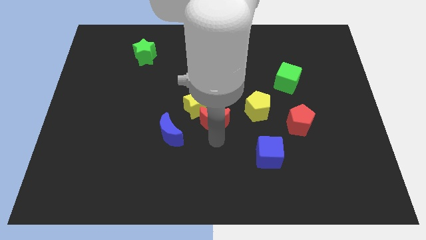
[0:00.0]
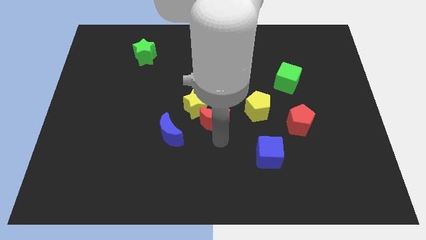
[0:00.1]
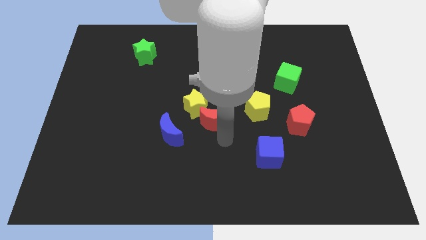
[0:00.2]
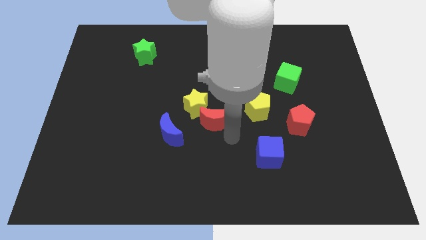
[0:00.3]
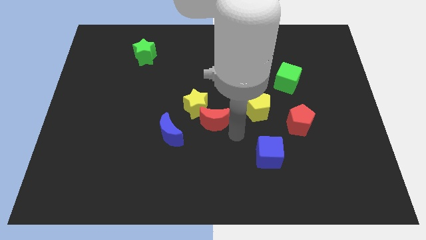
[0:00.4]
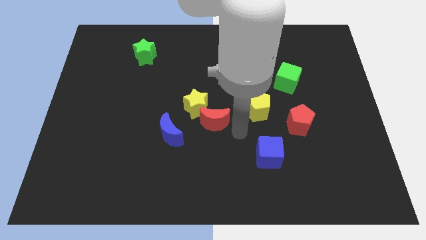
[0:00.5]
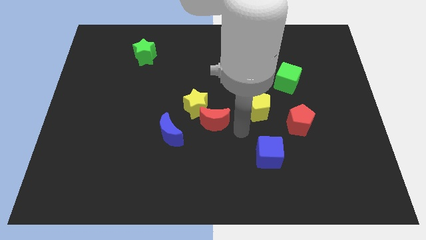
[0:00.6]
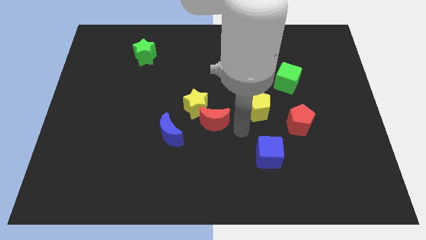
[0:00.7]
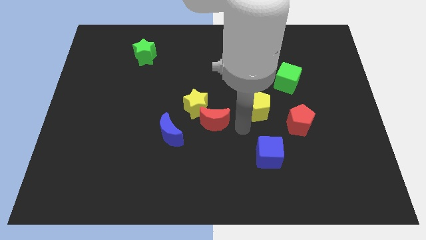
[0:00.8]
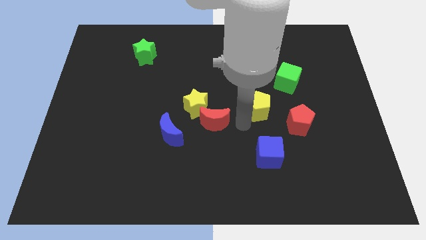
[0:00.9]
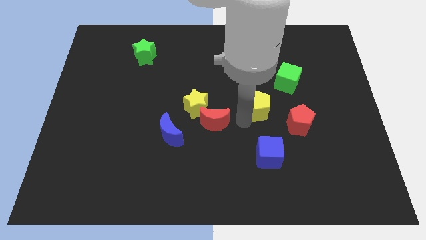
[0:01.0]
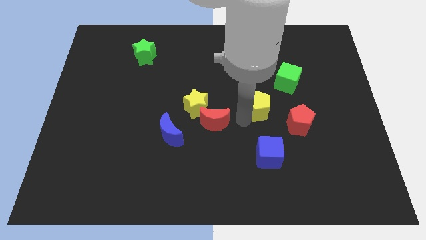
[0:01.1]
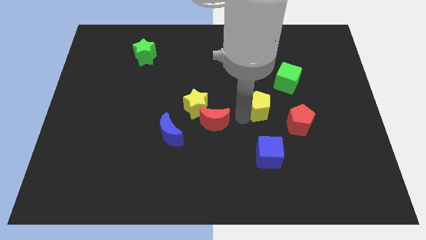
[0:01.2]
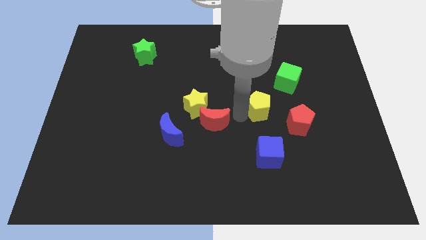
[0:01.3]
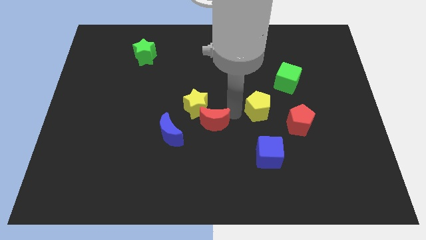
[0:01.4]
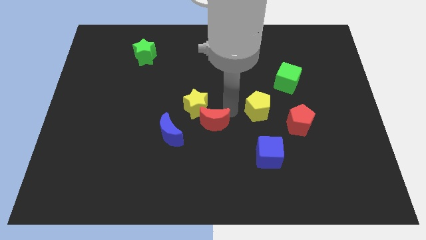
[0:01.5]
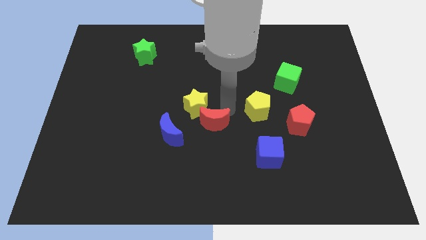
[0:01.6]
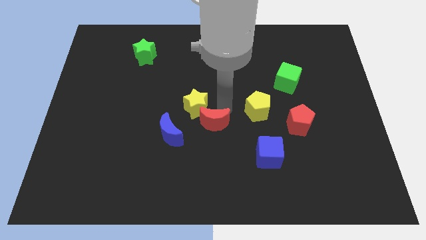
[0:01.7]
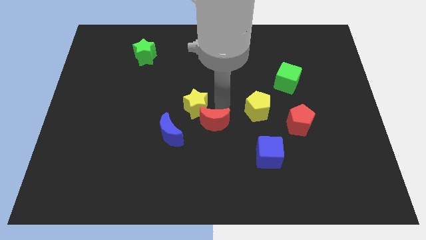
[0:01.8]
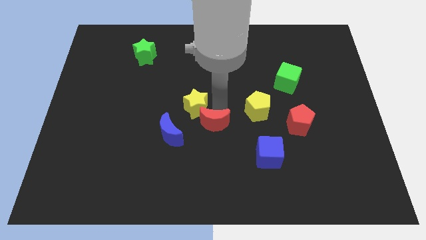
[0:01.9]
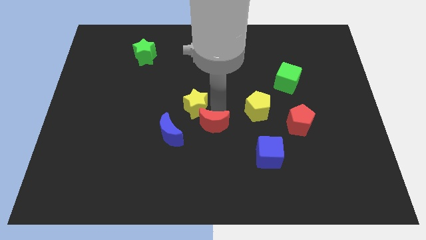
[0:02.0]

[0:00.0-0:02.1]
point your arm above red moon

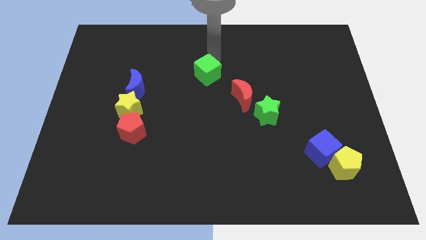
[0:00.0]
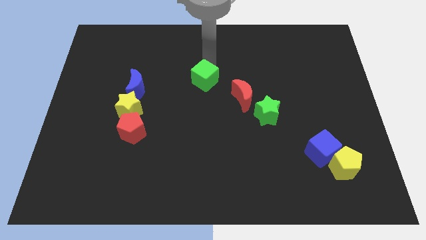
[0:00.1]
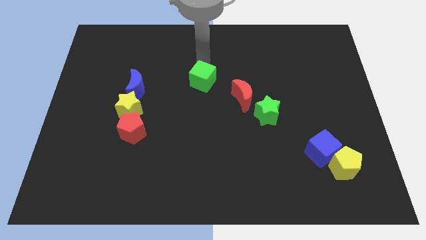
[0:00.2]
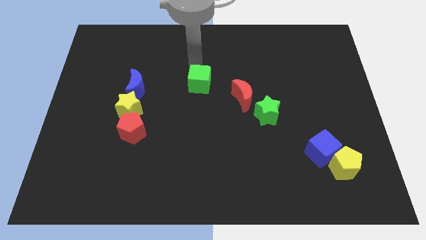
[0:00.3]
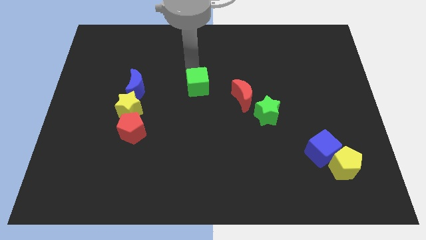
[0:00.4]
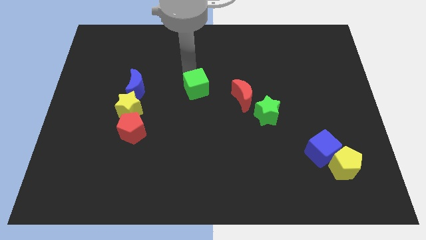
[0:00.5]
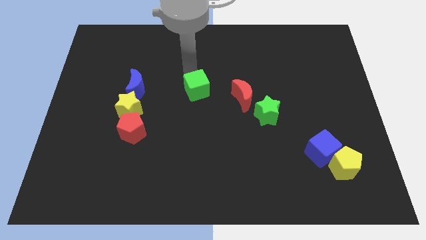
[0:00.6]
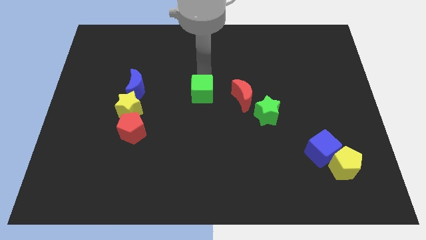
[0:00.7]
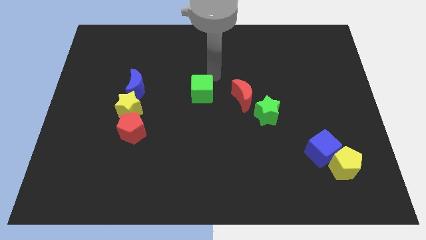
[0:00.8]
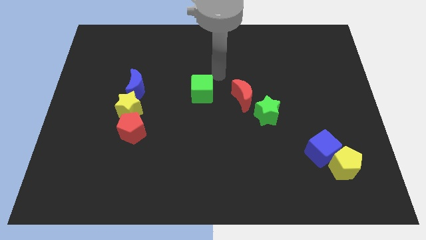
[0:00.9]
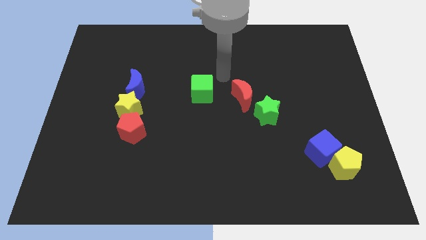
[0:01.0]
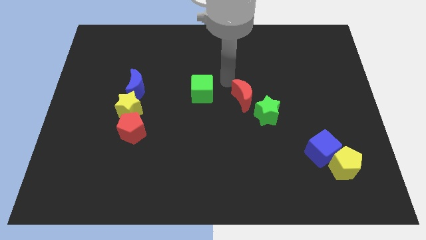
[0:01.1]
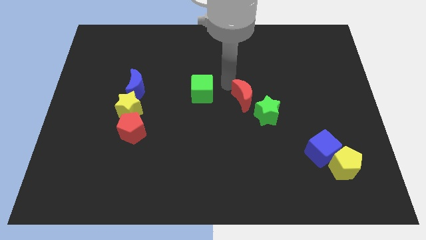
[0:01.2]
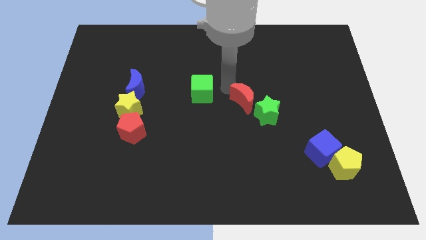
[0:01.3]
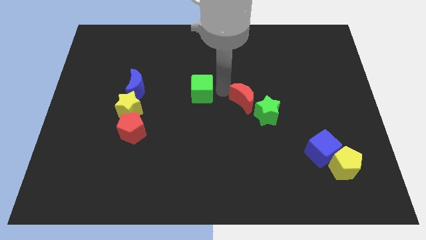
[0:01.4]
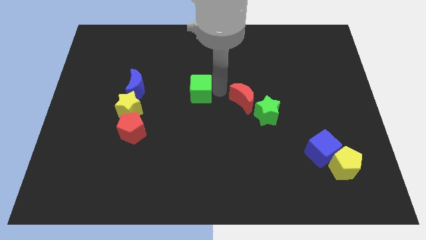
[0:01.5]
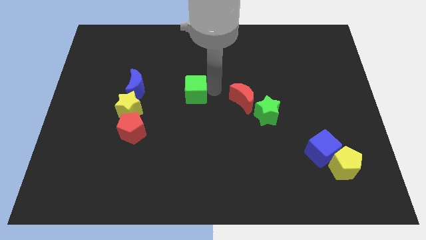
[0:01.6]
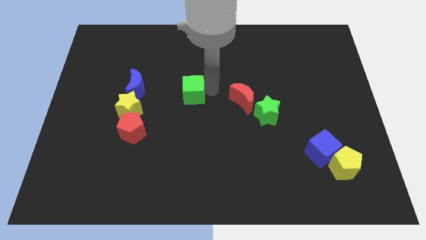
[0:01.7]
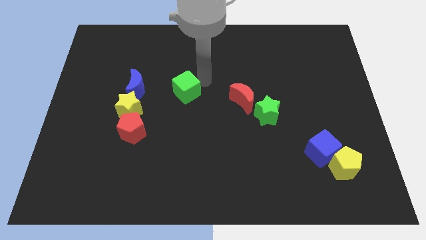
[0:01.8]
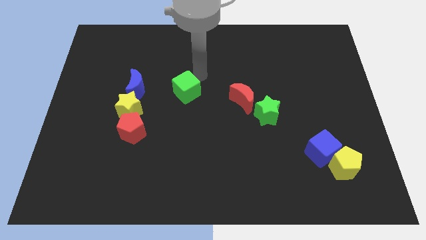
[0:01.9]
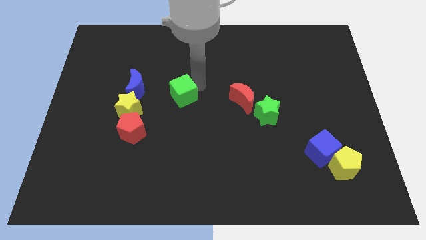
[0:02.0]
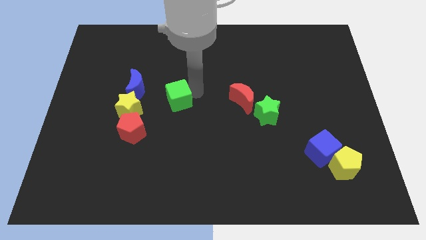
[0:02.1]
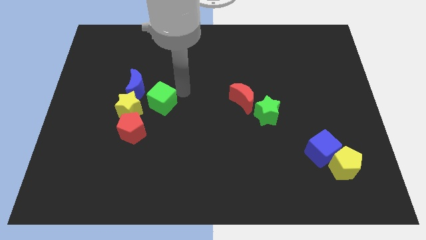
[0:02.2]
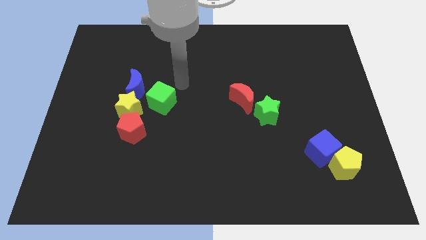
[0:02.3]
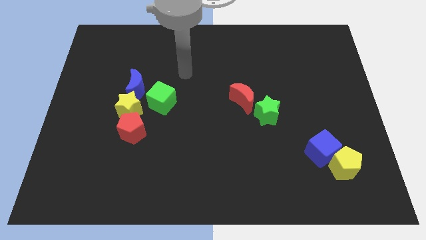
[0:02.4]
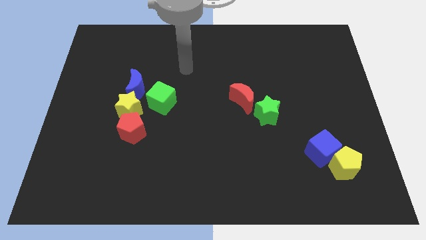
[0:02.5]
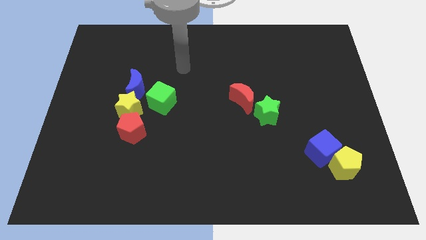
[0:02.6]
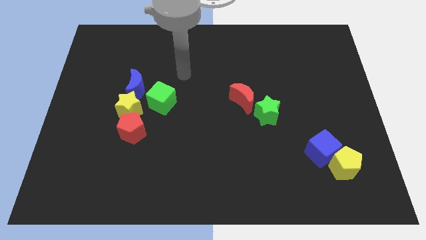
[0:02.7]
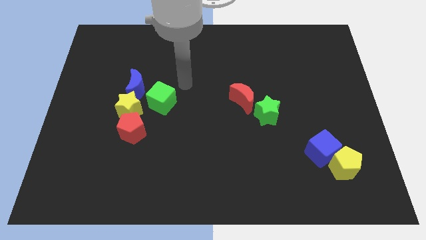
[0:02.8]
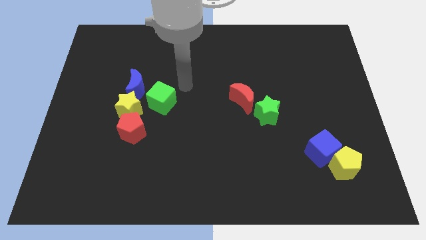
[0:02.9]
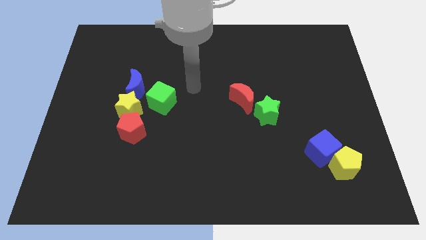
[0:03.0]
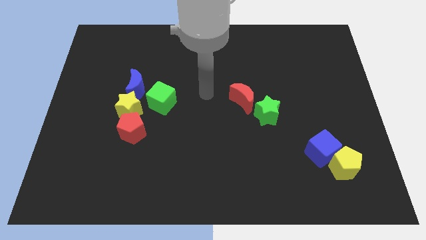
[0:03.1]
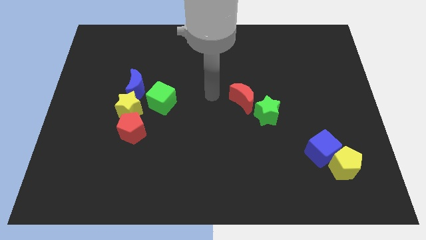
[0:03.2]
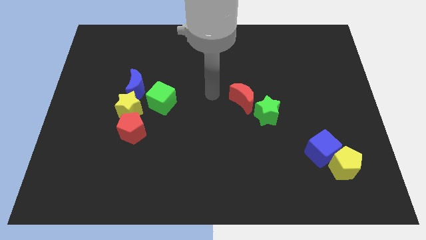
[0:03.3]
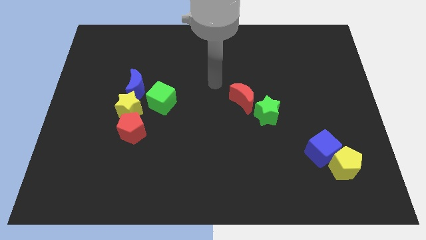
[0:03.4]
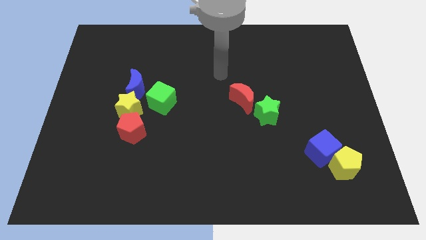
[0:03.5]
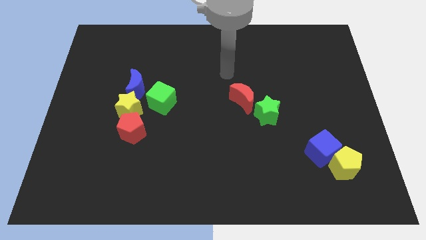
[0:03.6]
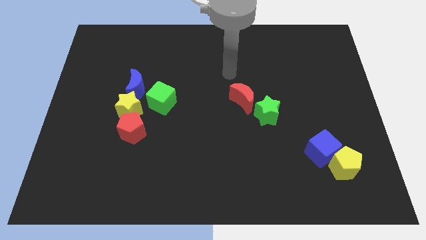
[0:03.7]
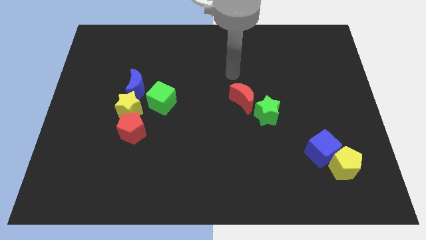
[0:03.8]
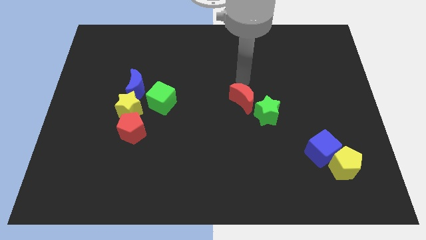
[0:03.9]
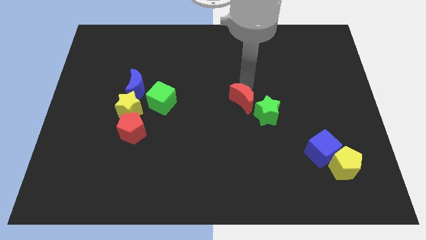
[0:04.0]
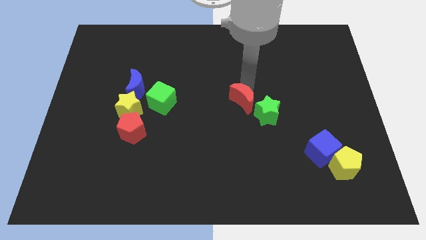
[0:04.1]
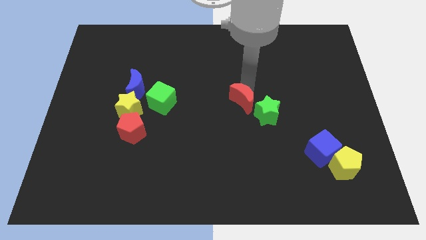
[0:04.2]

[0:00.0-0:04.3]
push the green cube to the right of the yellow star

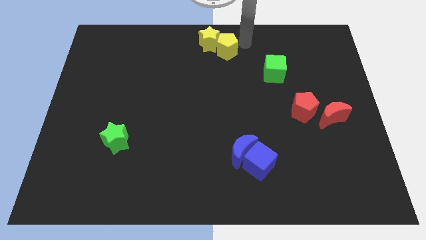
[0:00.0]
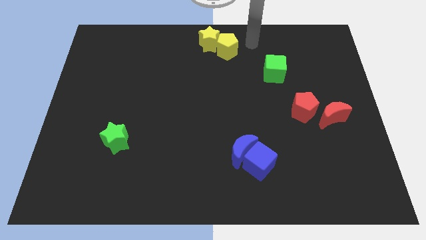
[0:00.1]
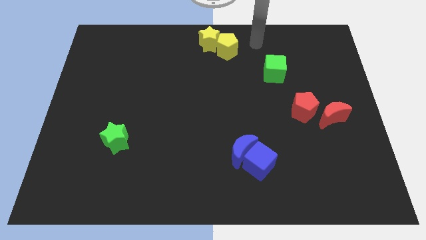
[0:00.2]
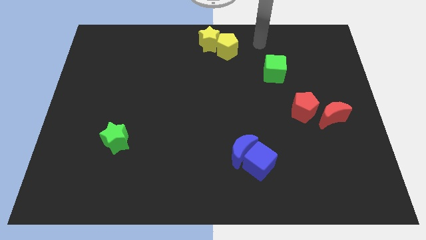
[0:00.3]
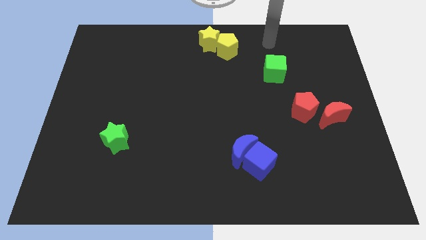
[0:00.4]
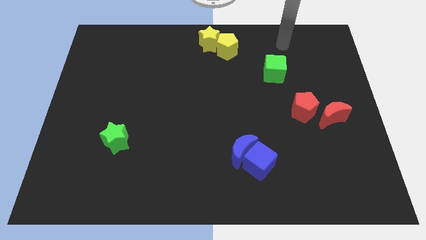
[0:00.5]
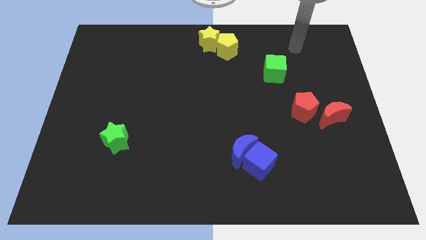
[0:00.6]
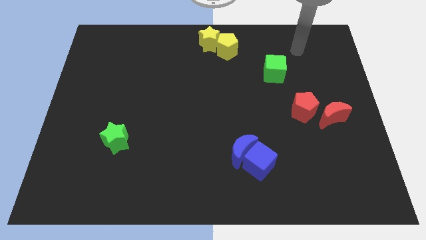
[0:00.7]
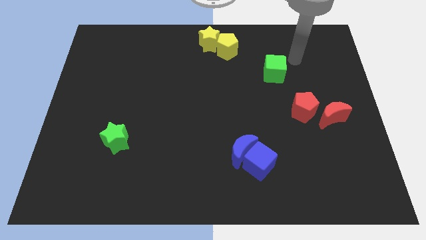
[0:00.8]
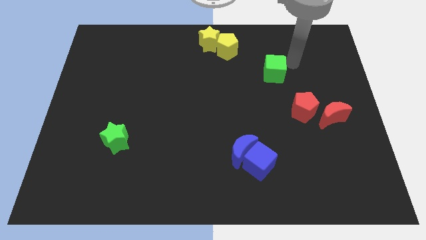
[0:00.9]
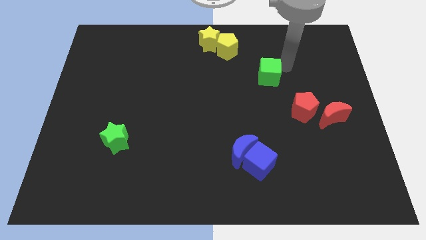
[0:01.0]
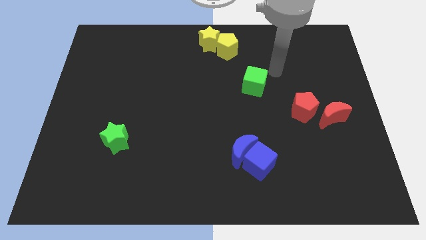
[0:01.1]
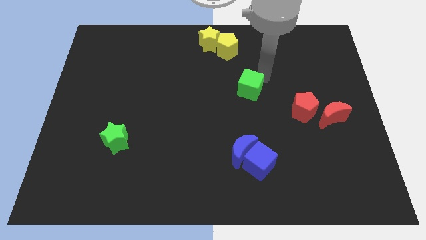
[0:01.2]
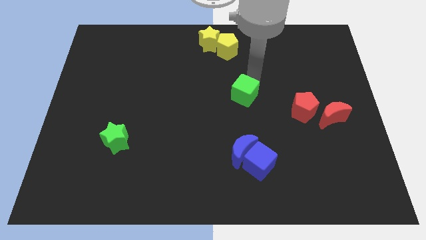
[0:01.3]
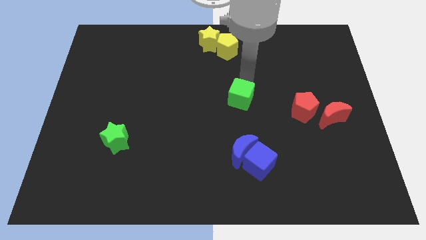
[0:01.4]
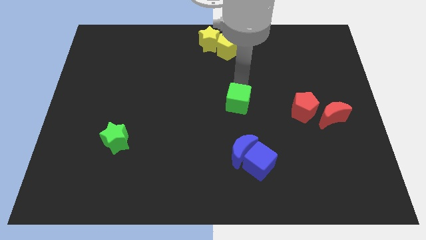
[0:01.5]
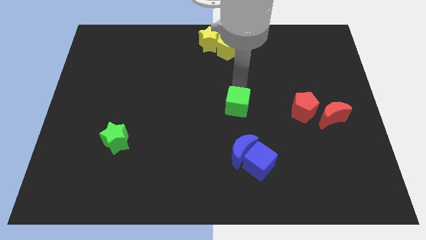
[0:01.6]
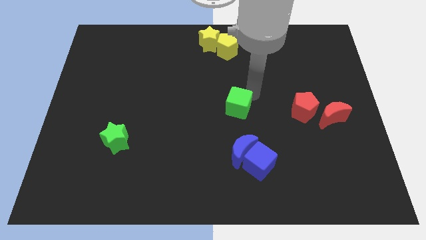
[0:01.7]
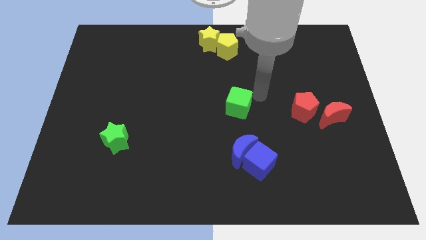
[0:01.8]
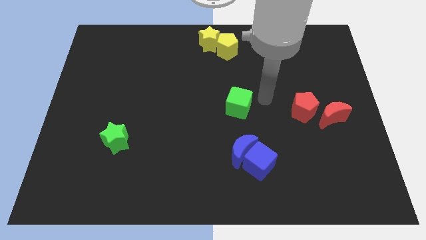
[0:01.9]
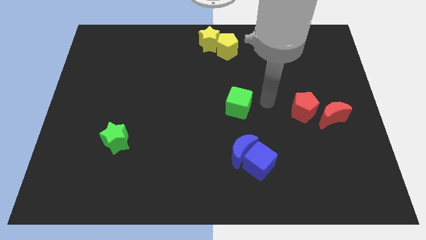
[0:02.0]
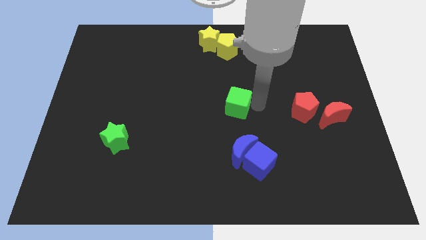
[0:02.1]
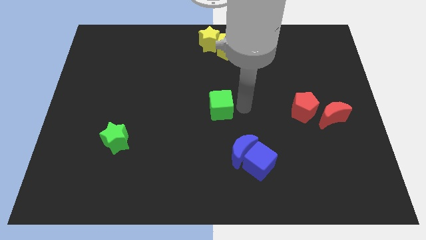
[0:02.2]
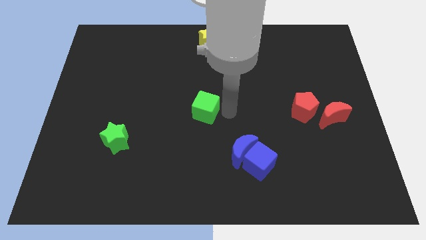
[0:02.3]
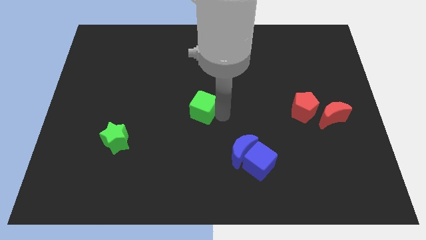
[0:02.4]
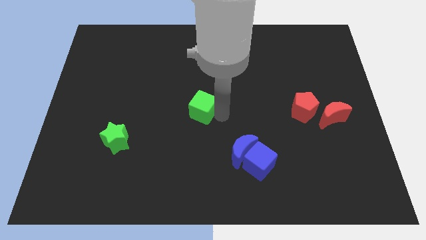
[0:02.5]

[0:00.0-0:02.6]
place the green cube at center of the board

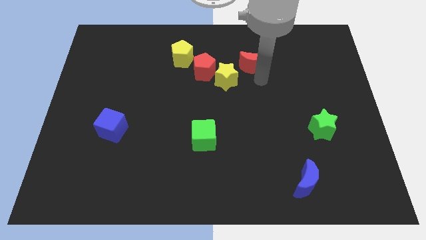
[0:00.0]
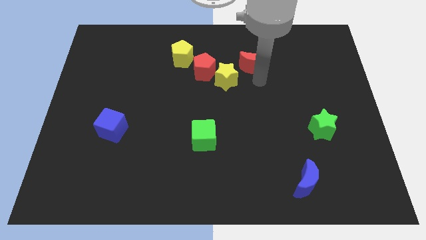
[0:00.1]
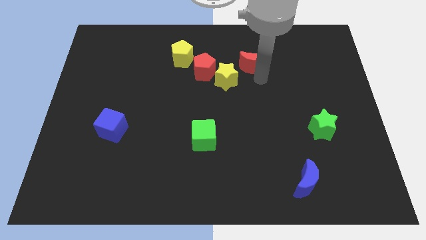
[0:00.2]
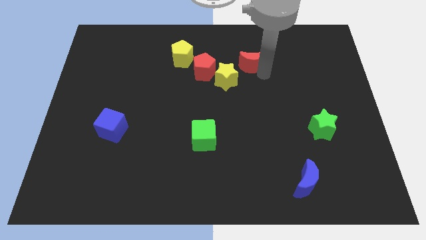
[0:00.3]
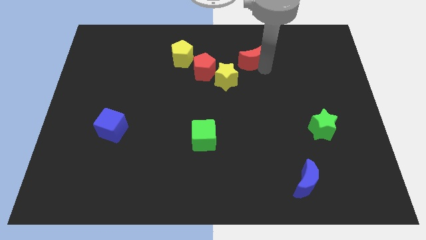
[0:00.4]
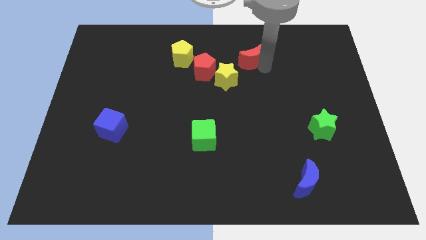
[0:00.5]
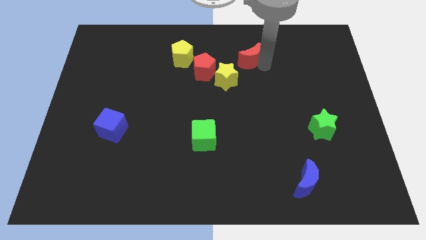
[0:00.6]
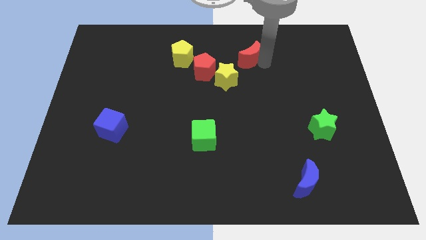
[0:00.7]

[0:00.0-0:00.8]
move the red crescent diagonal to the yellow star
